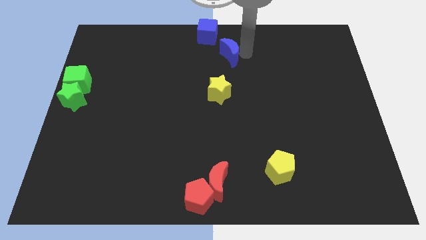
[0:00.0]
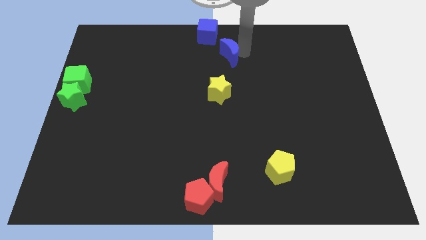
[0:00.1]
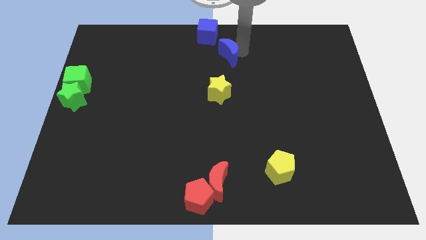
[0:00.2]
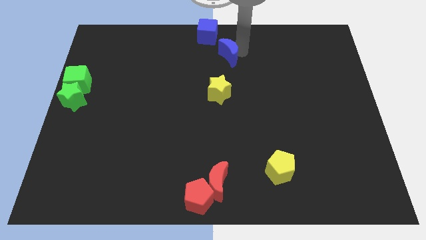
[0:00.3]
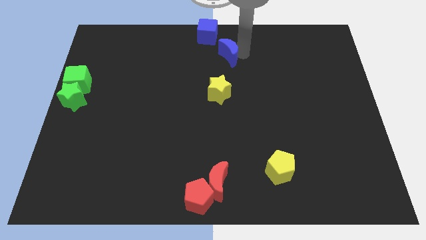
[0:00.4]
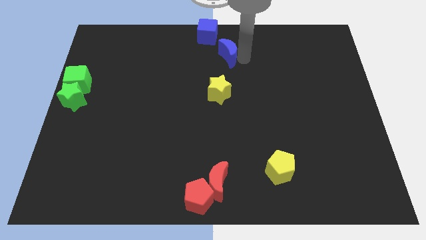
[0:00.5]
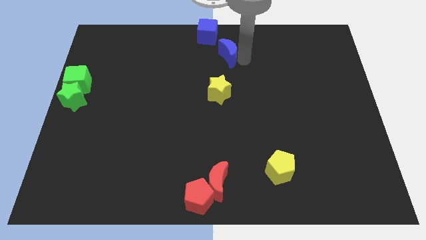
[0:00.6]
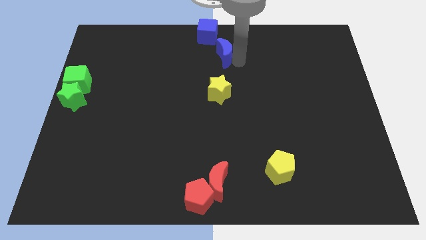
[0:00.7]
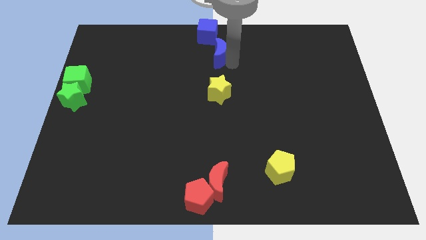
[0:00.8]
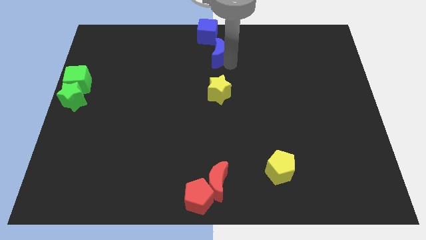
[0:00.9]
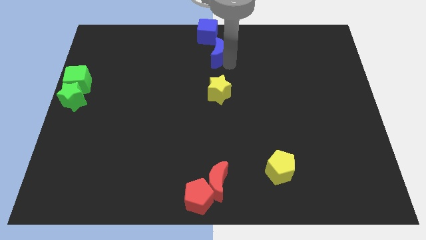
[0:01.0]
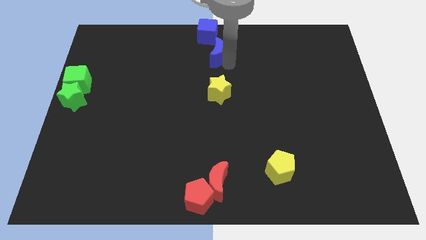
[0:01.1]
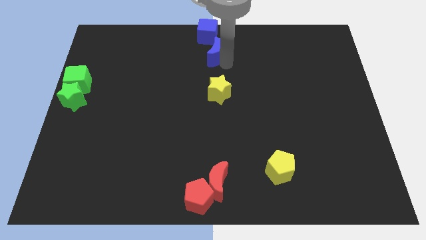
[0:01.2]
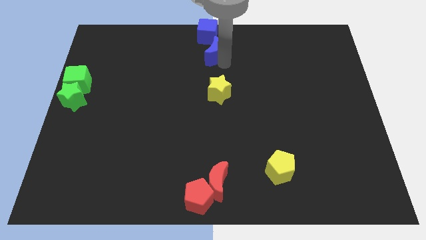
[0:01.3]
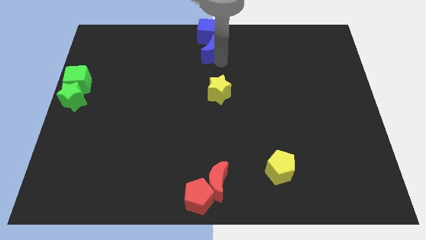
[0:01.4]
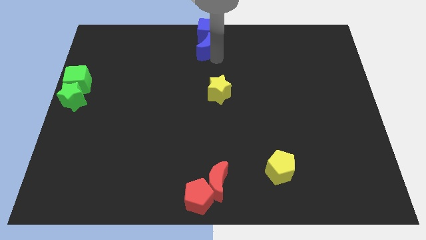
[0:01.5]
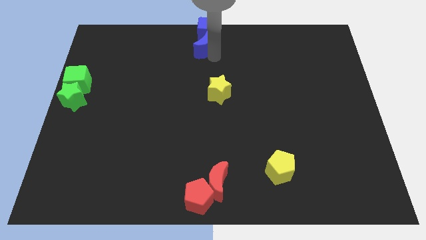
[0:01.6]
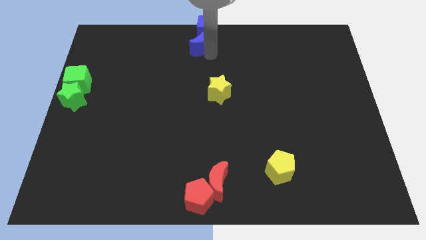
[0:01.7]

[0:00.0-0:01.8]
place blue crescent below blue cube

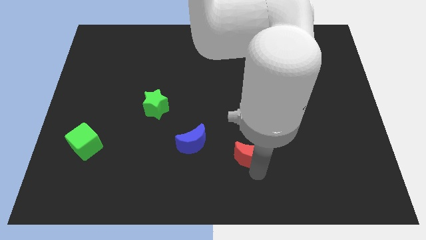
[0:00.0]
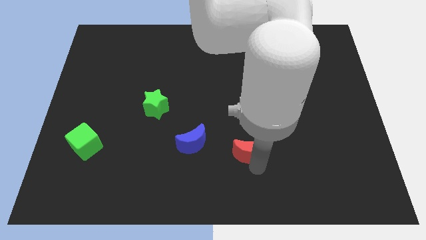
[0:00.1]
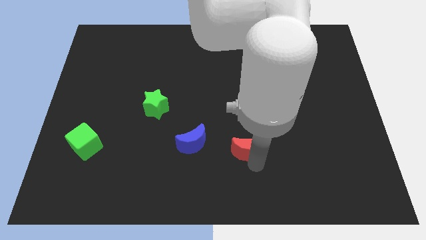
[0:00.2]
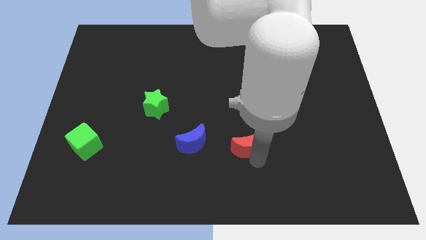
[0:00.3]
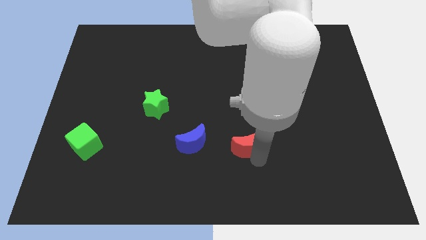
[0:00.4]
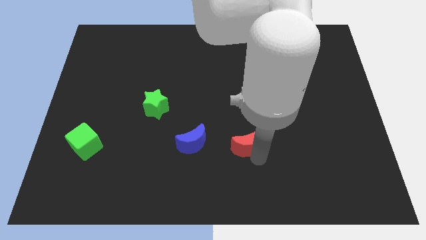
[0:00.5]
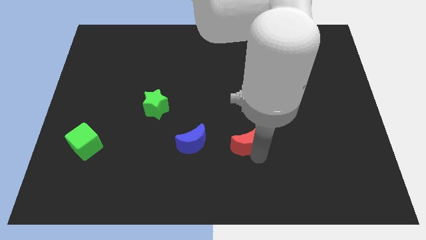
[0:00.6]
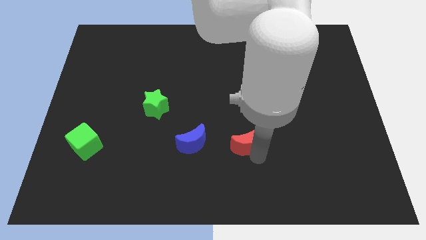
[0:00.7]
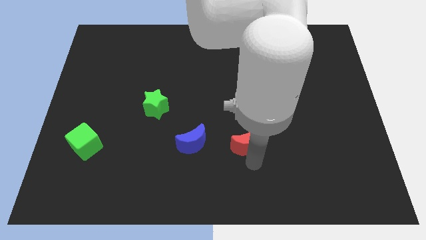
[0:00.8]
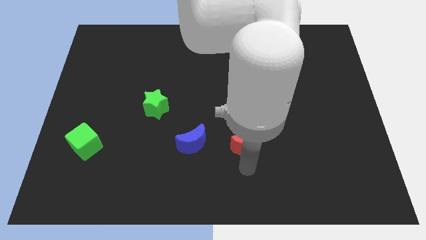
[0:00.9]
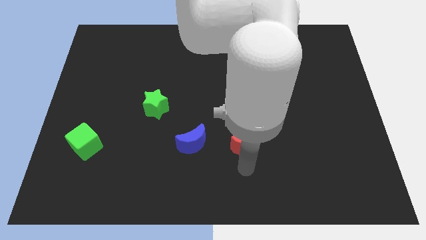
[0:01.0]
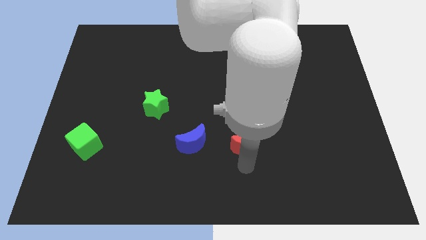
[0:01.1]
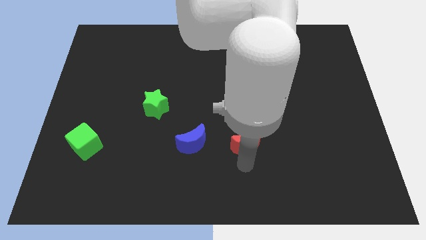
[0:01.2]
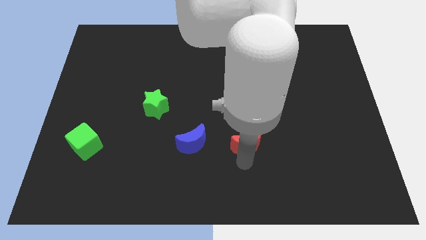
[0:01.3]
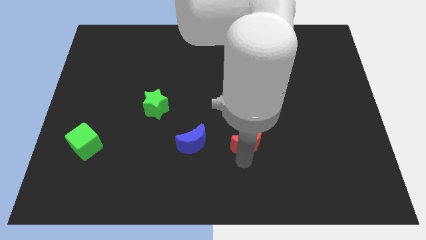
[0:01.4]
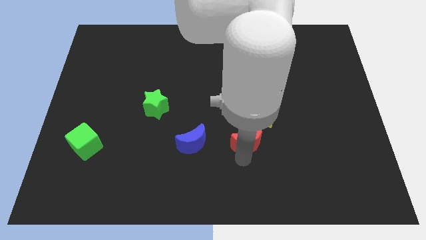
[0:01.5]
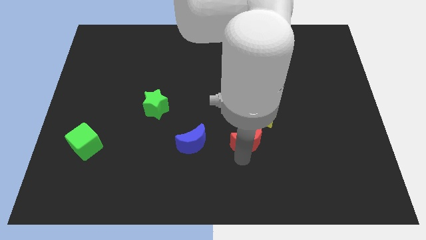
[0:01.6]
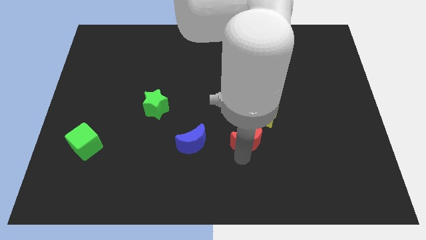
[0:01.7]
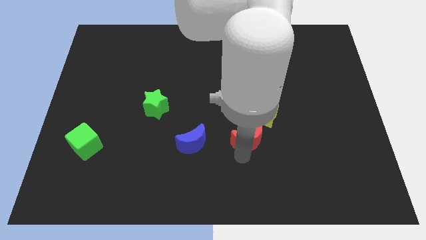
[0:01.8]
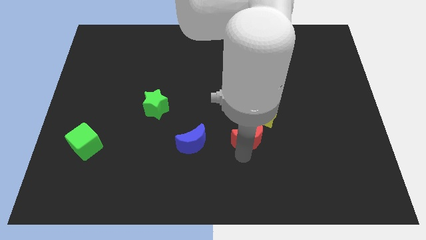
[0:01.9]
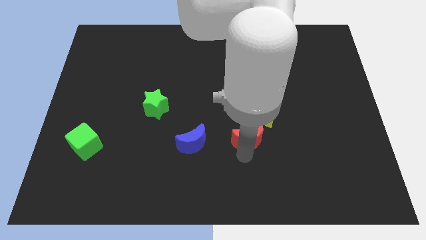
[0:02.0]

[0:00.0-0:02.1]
place red moon to the bottom left of yellow star

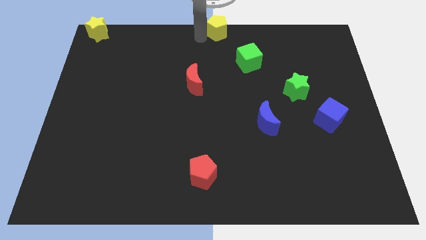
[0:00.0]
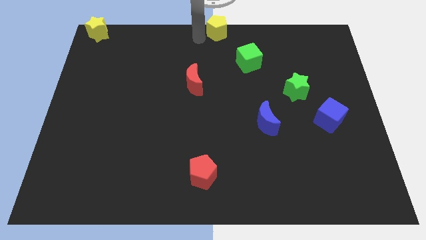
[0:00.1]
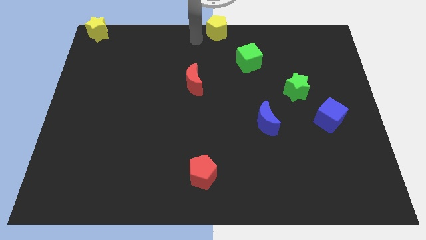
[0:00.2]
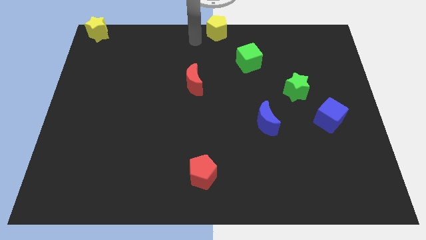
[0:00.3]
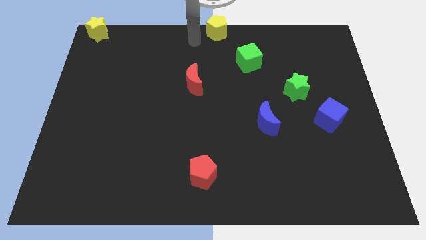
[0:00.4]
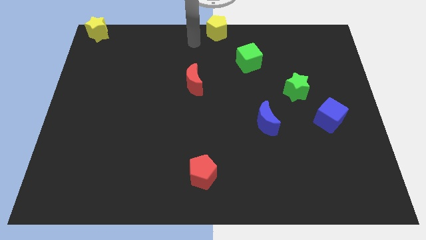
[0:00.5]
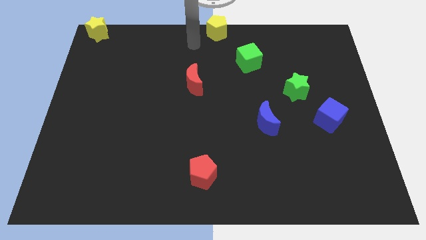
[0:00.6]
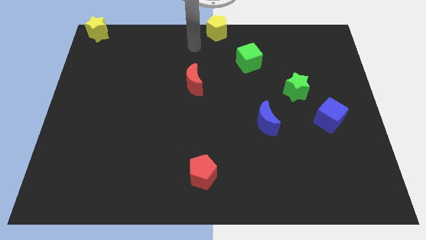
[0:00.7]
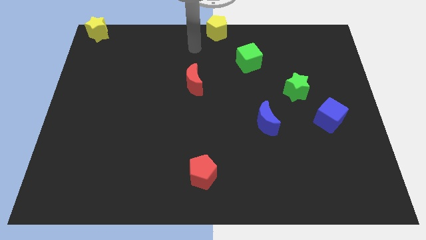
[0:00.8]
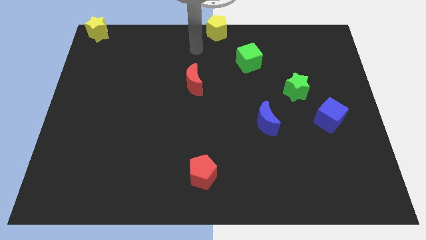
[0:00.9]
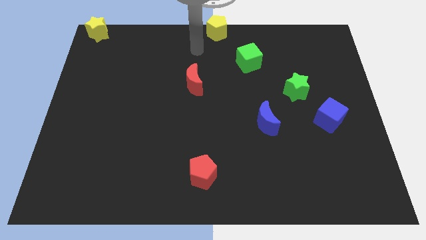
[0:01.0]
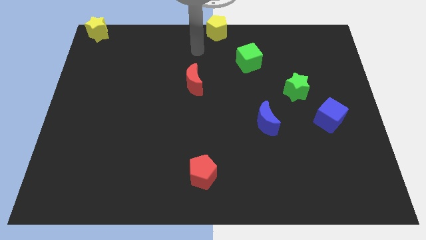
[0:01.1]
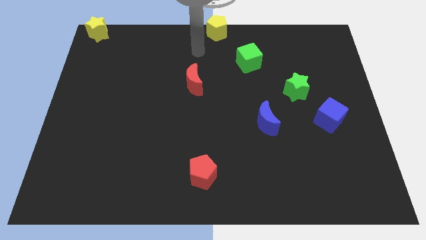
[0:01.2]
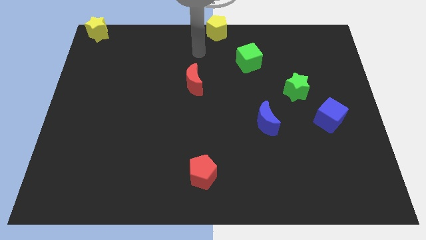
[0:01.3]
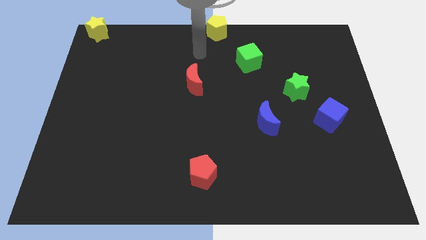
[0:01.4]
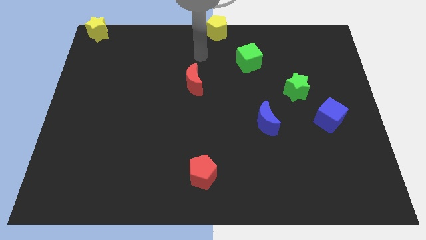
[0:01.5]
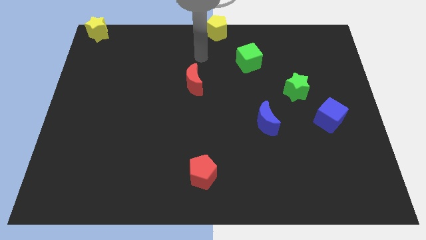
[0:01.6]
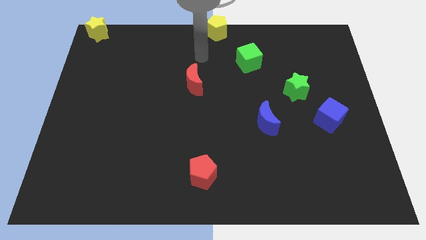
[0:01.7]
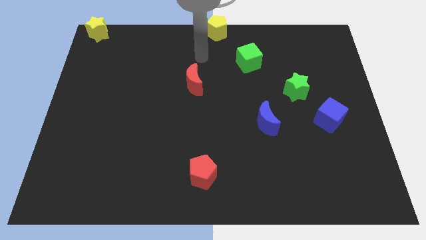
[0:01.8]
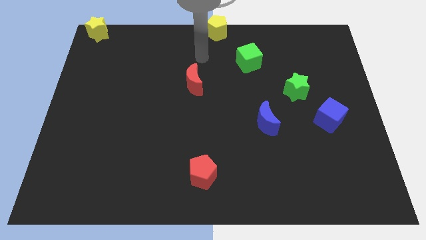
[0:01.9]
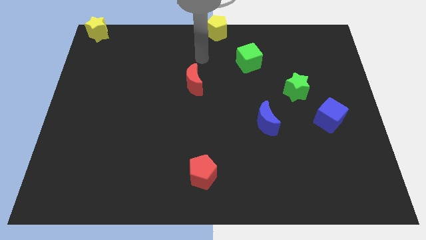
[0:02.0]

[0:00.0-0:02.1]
place the arm above the red moon

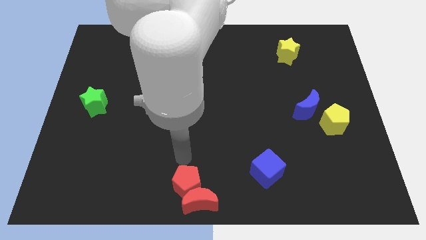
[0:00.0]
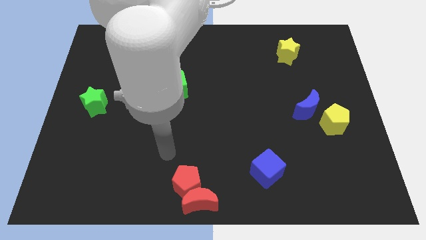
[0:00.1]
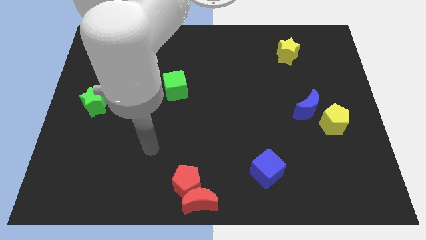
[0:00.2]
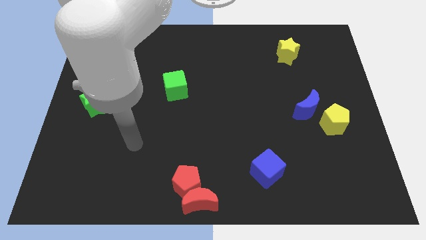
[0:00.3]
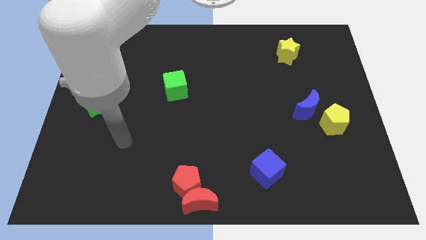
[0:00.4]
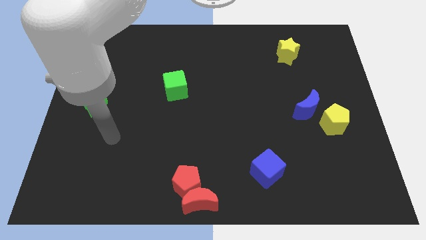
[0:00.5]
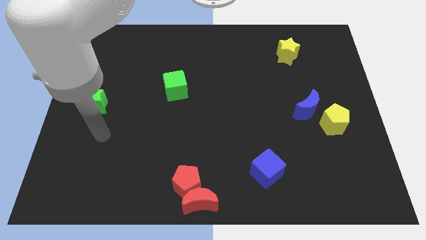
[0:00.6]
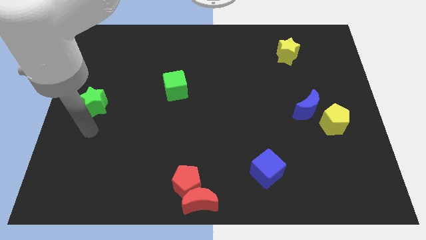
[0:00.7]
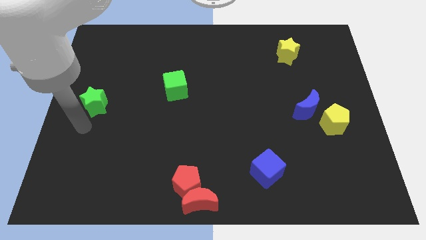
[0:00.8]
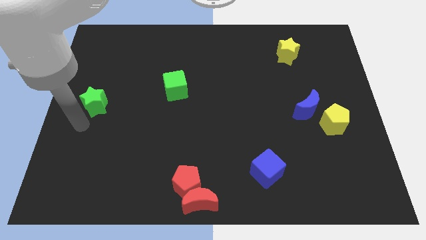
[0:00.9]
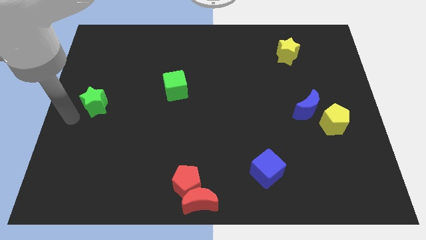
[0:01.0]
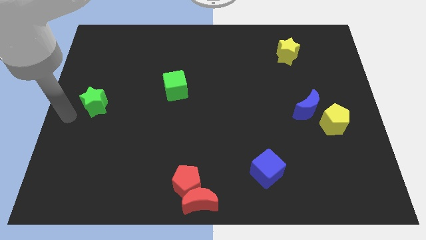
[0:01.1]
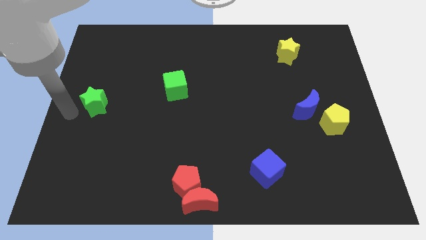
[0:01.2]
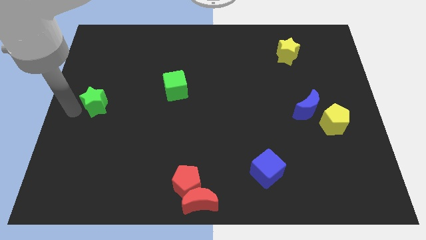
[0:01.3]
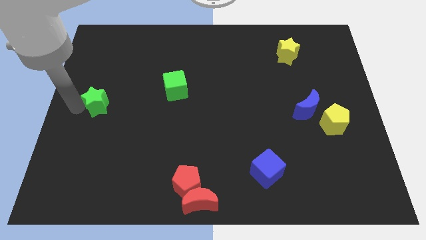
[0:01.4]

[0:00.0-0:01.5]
tap the green star on left

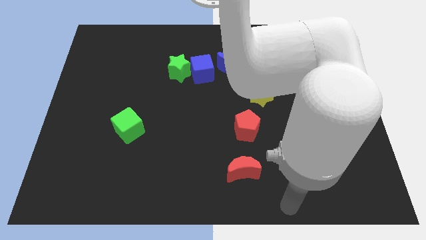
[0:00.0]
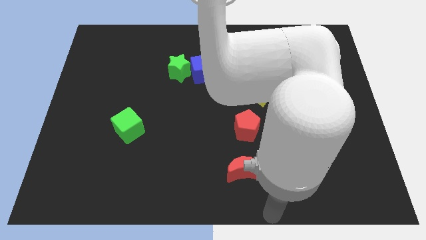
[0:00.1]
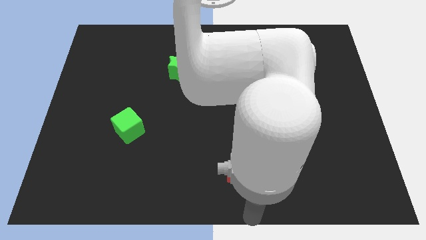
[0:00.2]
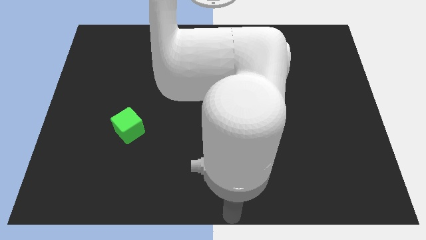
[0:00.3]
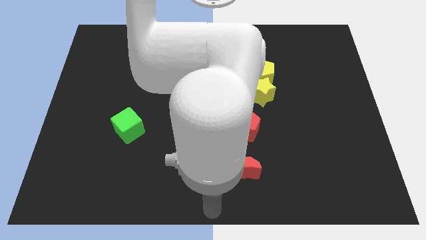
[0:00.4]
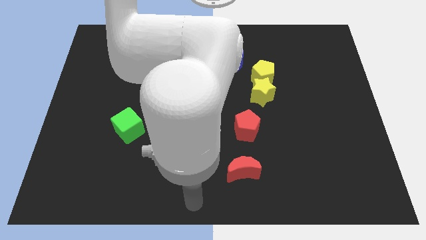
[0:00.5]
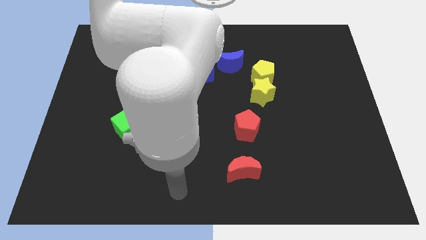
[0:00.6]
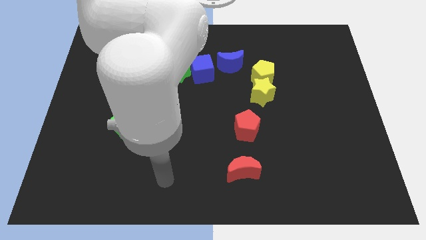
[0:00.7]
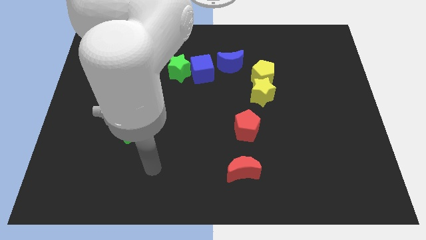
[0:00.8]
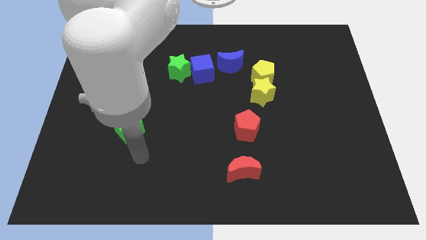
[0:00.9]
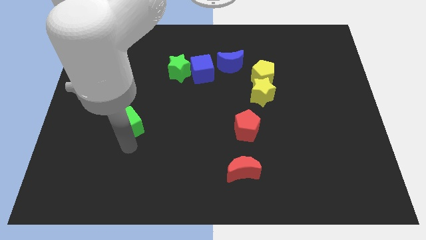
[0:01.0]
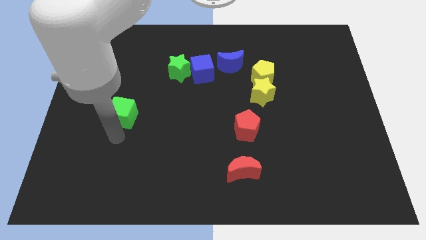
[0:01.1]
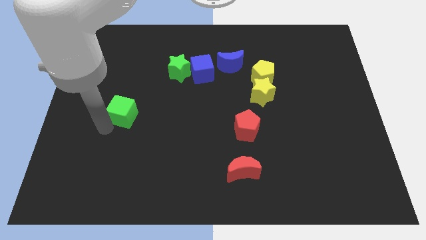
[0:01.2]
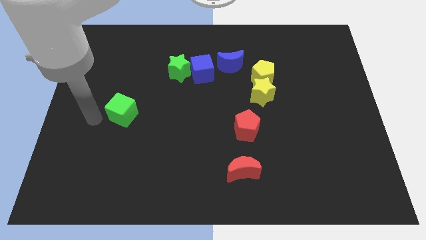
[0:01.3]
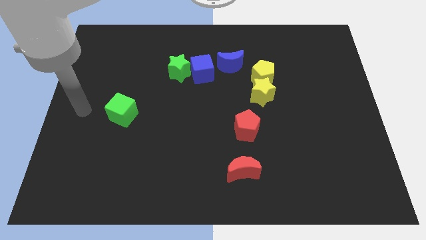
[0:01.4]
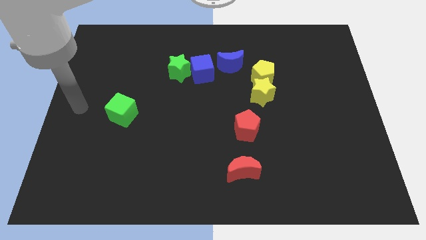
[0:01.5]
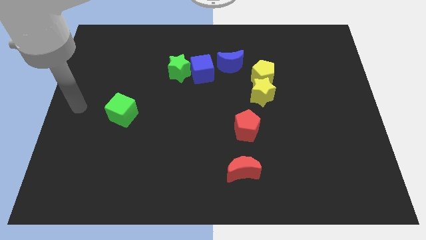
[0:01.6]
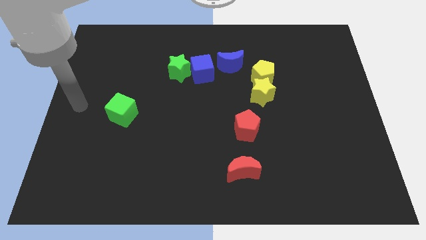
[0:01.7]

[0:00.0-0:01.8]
slightly push the green cube upwards
